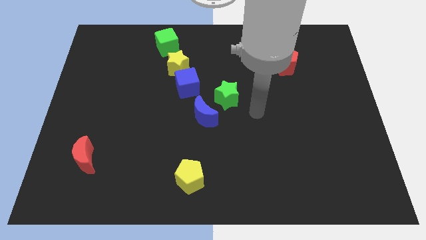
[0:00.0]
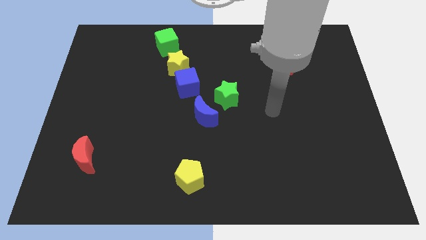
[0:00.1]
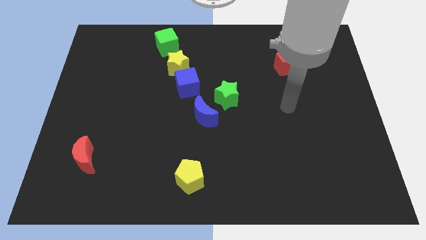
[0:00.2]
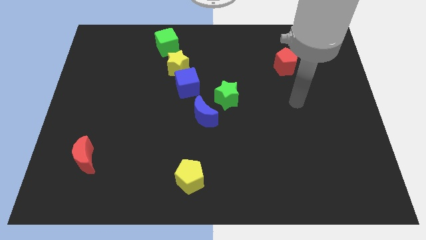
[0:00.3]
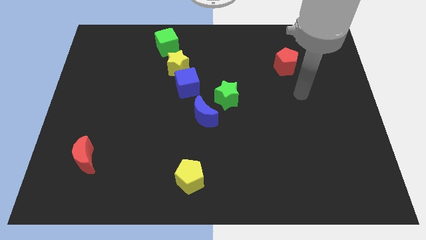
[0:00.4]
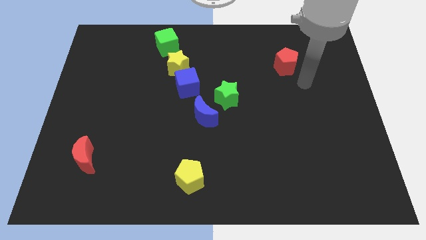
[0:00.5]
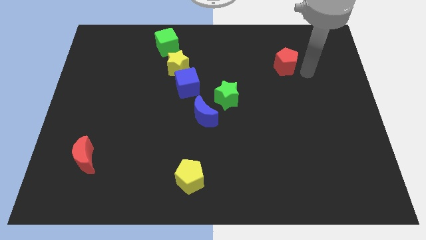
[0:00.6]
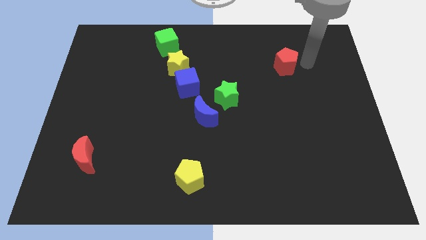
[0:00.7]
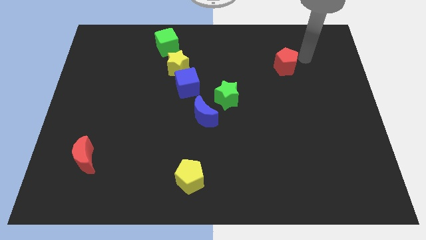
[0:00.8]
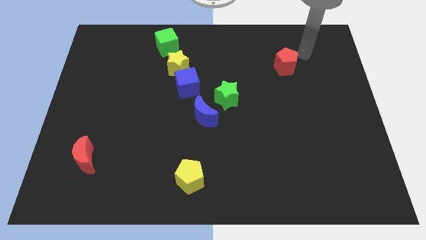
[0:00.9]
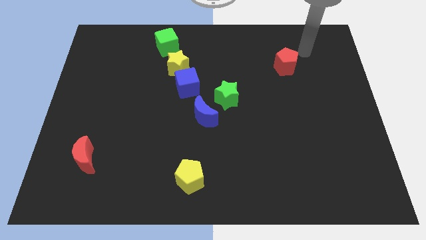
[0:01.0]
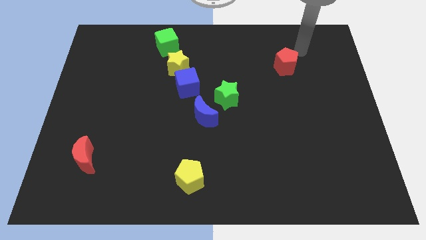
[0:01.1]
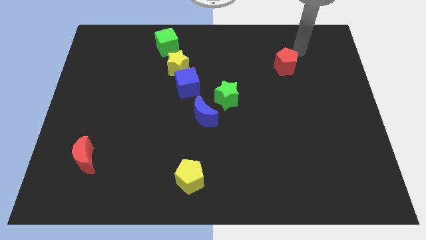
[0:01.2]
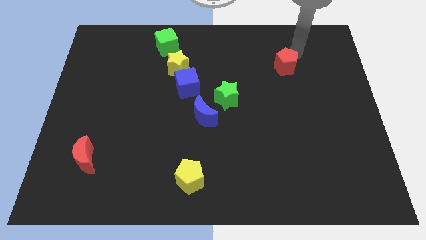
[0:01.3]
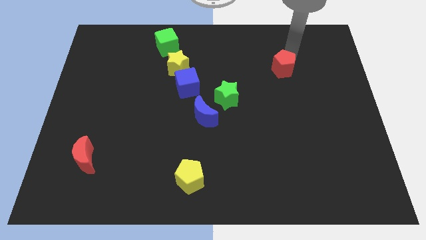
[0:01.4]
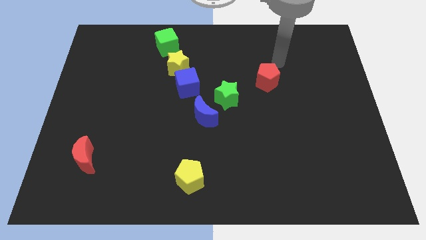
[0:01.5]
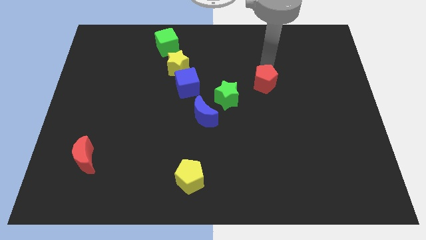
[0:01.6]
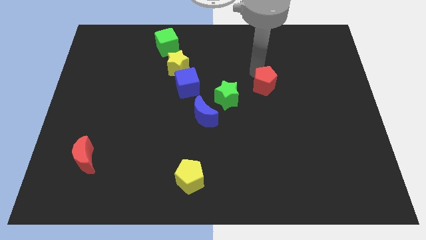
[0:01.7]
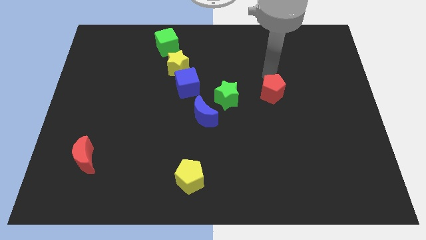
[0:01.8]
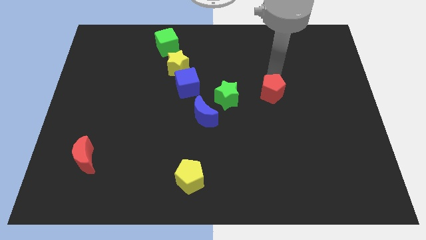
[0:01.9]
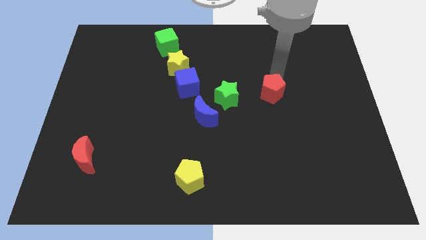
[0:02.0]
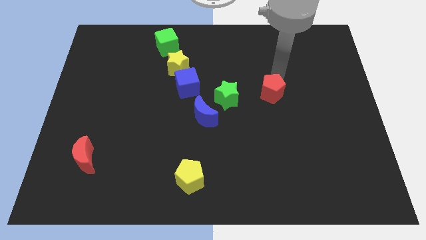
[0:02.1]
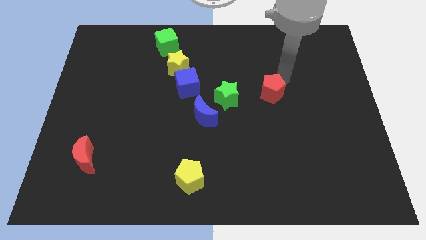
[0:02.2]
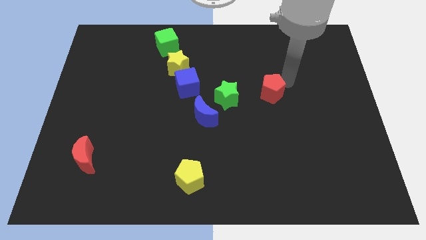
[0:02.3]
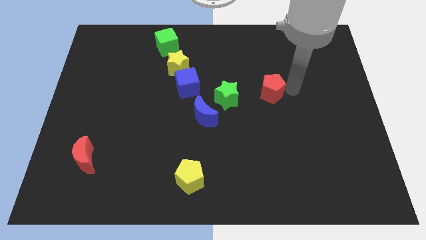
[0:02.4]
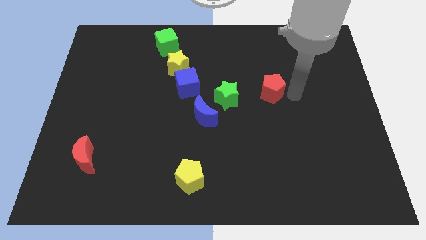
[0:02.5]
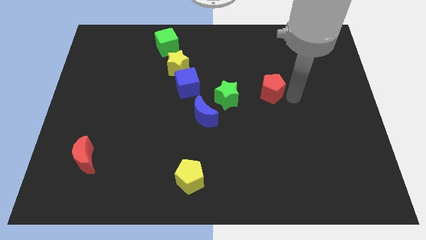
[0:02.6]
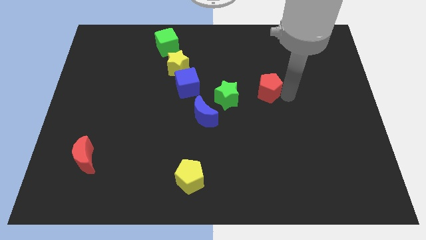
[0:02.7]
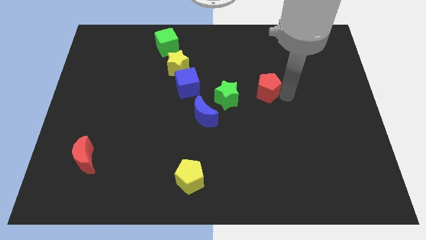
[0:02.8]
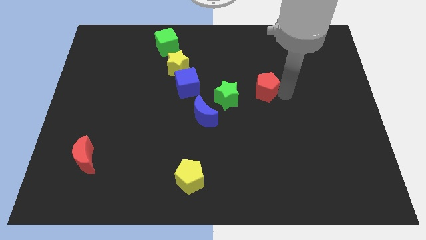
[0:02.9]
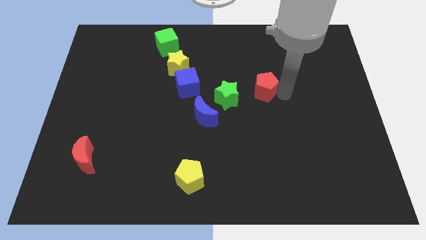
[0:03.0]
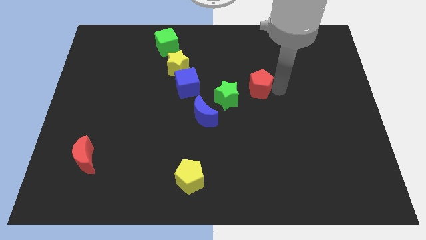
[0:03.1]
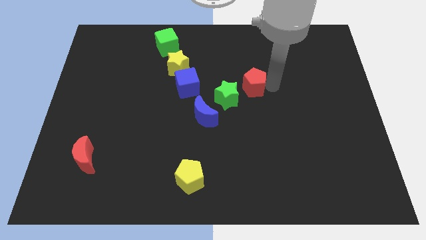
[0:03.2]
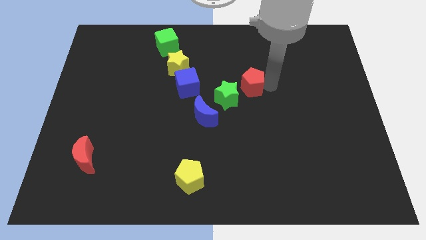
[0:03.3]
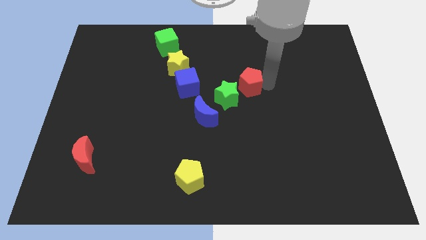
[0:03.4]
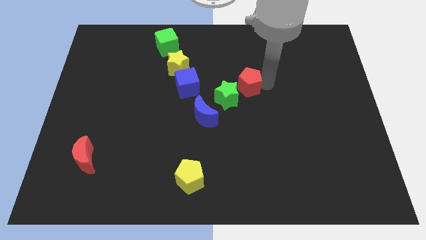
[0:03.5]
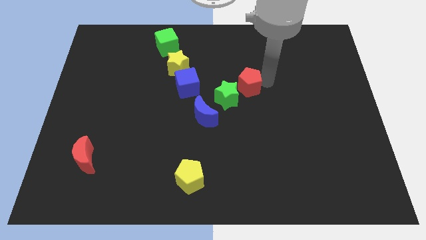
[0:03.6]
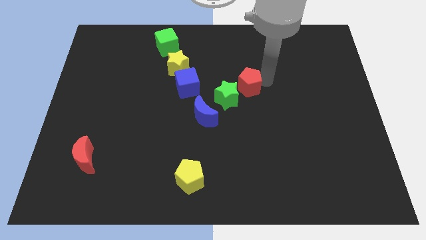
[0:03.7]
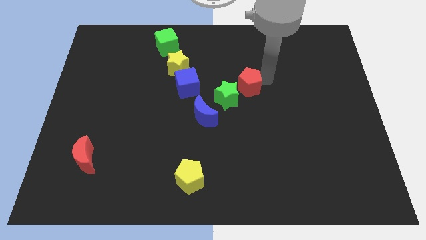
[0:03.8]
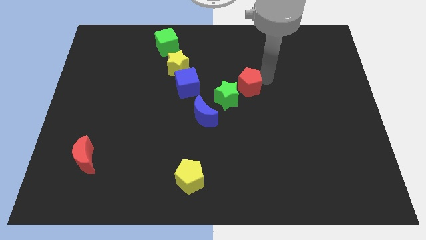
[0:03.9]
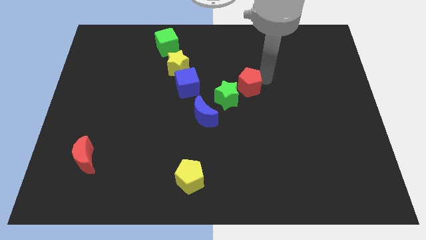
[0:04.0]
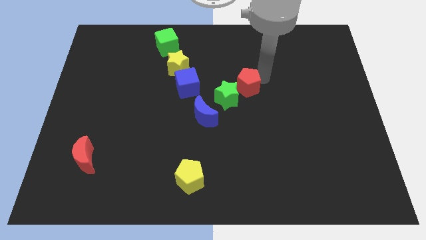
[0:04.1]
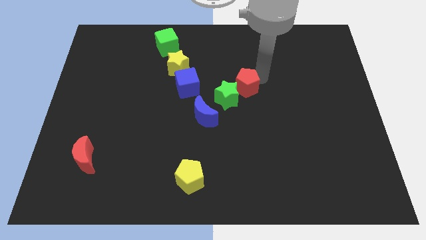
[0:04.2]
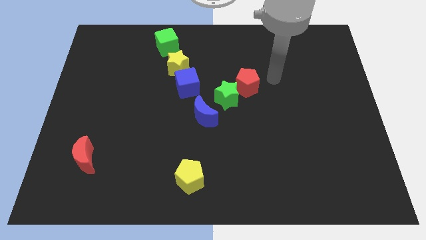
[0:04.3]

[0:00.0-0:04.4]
put the red pentagon at the top right side of the green star

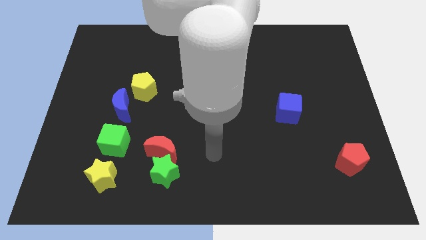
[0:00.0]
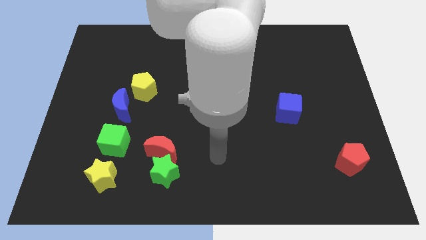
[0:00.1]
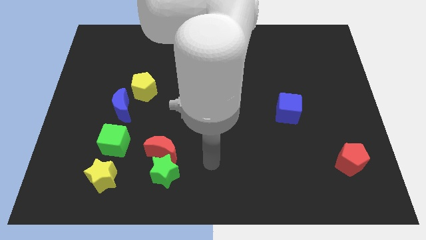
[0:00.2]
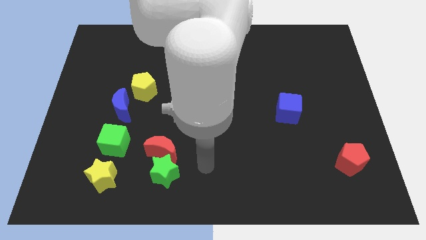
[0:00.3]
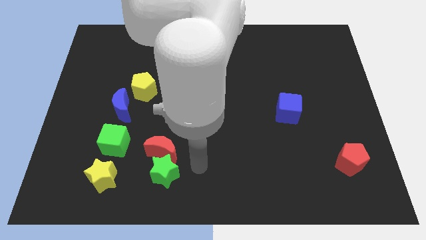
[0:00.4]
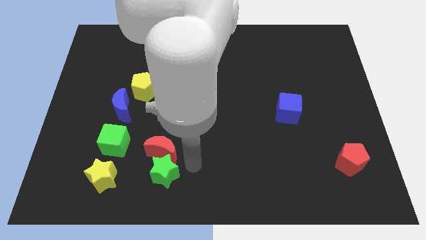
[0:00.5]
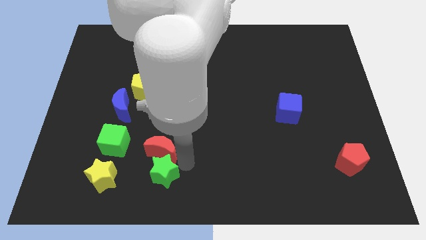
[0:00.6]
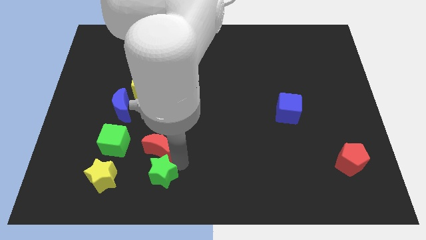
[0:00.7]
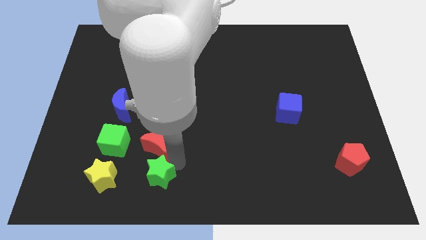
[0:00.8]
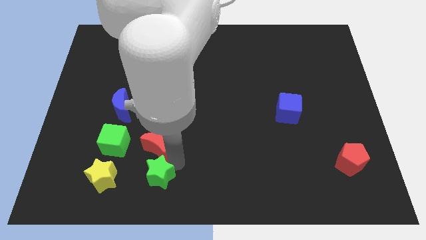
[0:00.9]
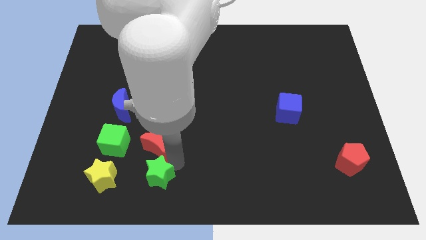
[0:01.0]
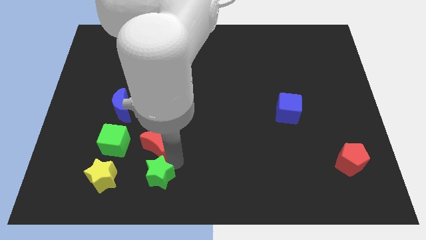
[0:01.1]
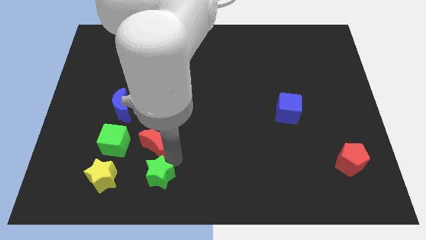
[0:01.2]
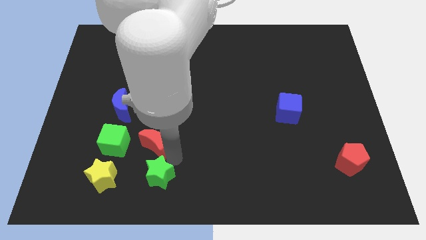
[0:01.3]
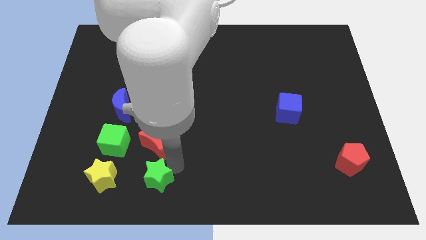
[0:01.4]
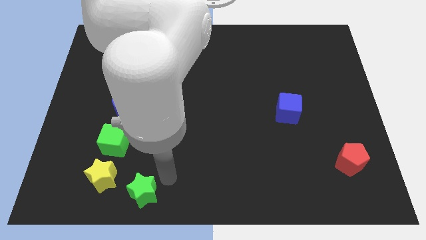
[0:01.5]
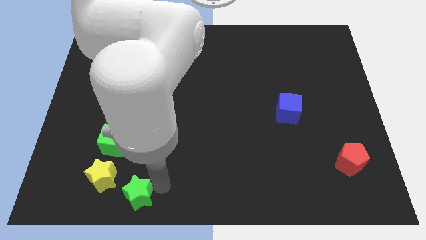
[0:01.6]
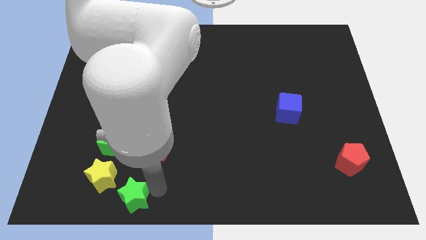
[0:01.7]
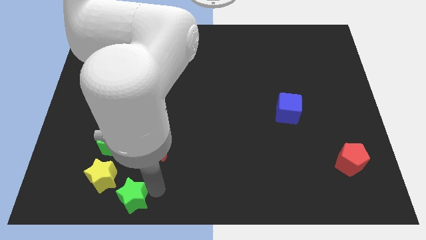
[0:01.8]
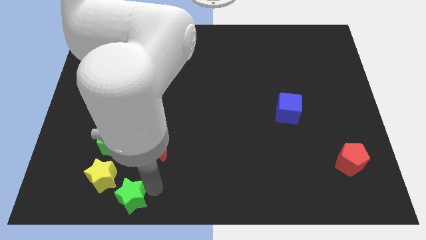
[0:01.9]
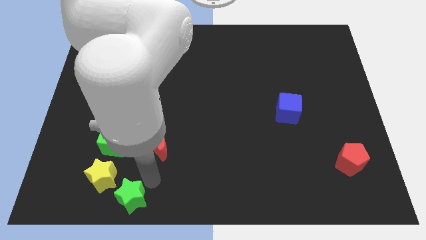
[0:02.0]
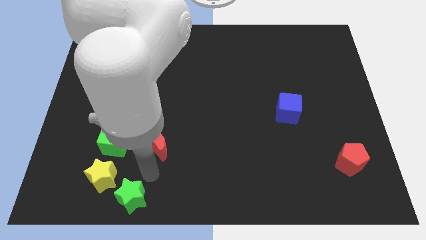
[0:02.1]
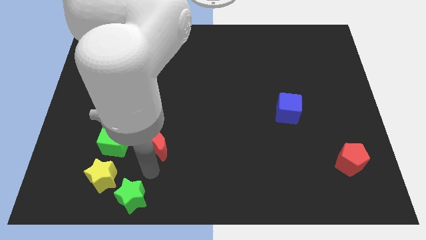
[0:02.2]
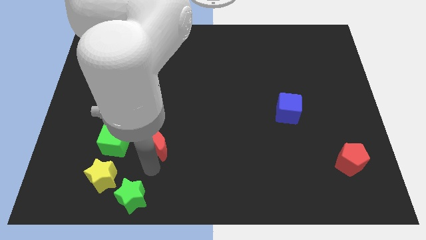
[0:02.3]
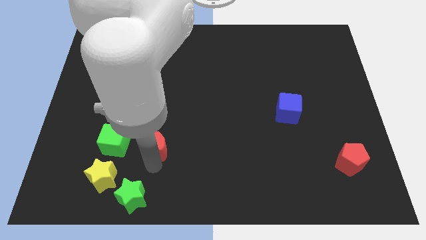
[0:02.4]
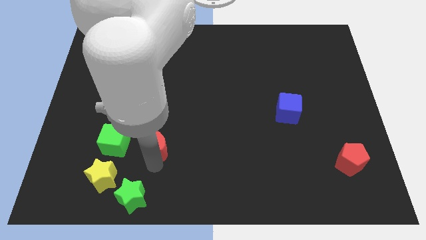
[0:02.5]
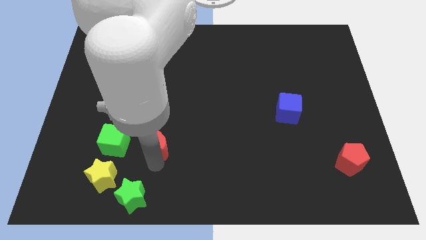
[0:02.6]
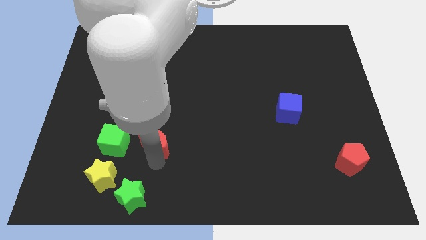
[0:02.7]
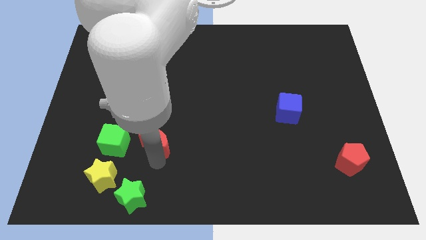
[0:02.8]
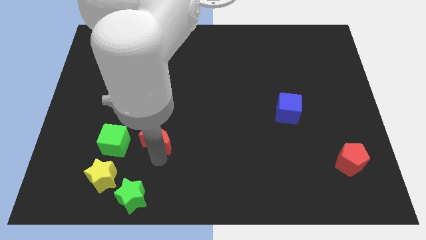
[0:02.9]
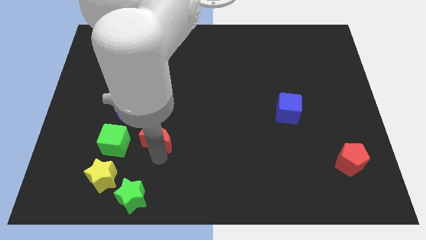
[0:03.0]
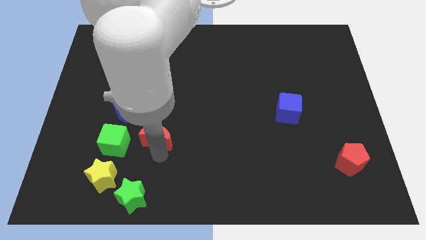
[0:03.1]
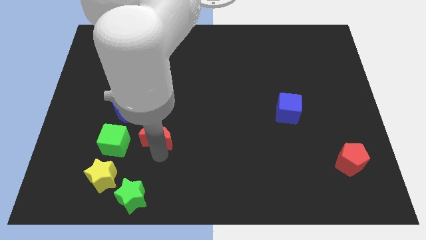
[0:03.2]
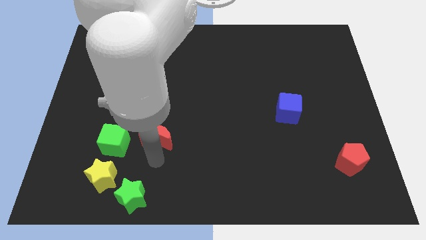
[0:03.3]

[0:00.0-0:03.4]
separate red moon from green star

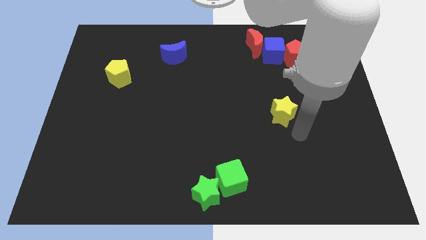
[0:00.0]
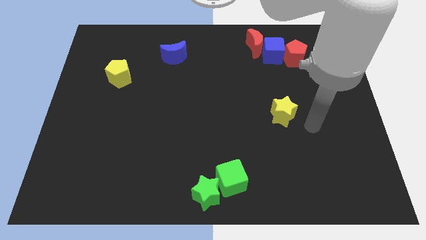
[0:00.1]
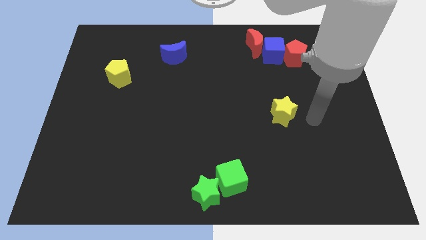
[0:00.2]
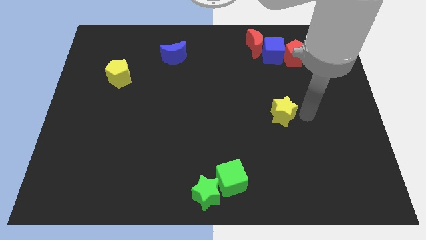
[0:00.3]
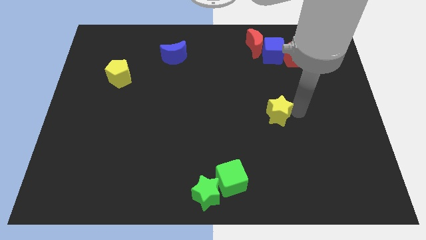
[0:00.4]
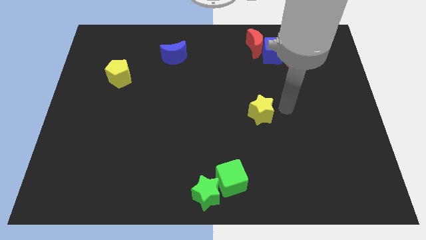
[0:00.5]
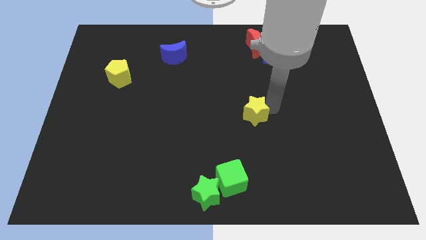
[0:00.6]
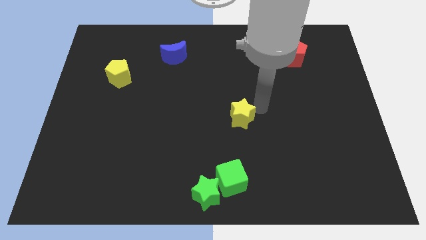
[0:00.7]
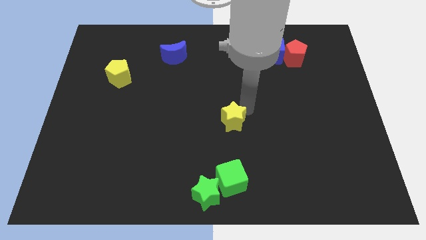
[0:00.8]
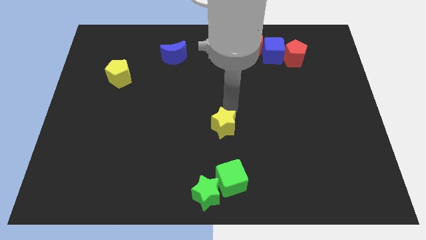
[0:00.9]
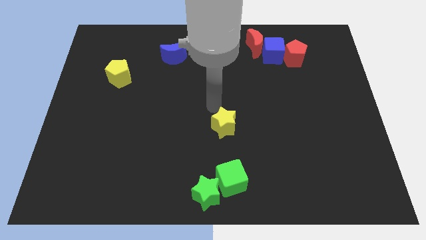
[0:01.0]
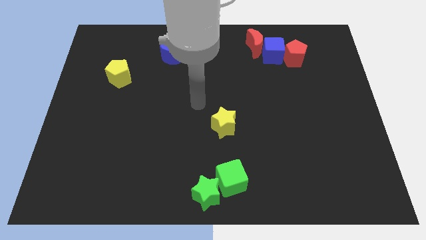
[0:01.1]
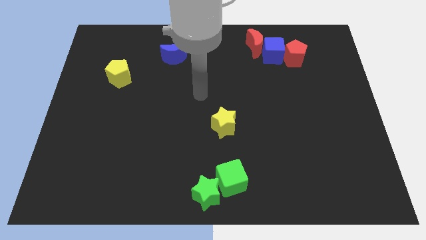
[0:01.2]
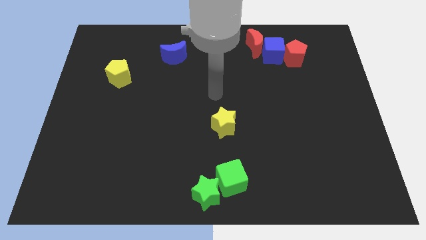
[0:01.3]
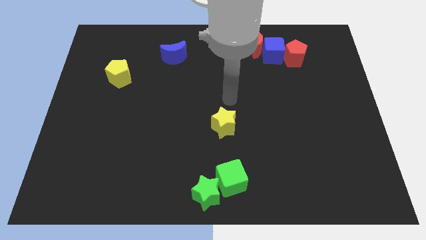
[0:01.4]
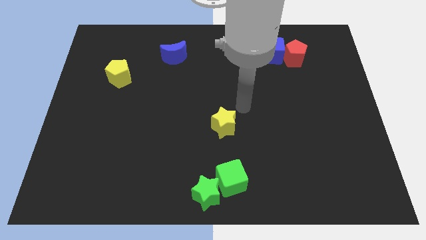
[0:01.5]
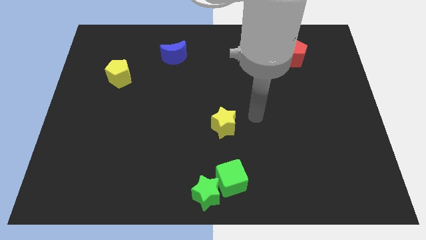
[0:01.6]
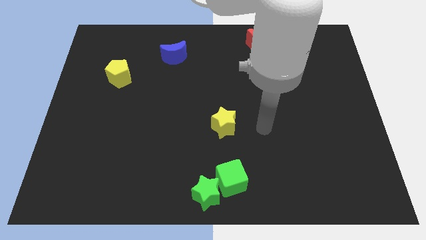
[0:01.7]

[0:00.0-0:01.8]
move the yellow star to the top left side of the green cube
